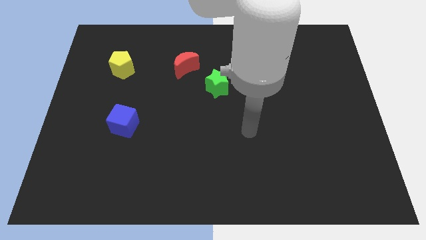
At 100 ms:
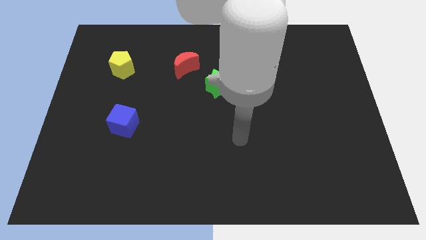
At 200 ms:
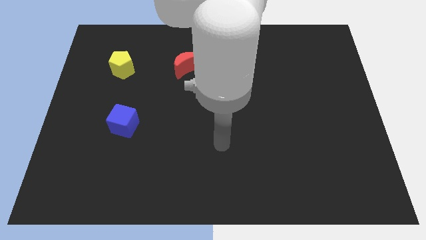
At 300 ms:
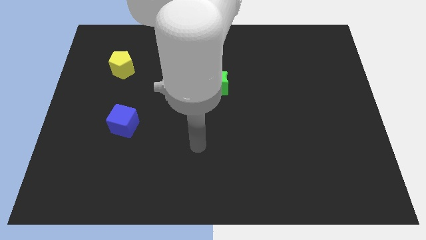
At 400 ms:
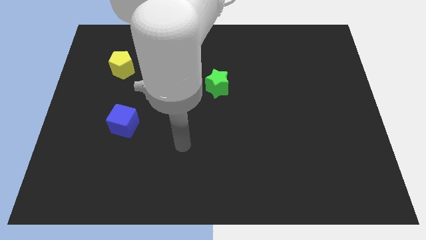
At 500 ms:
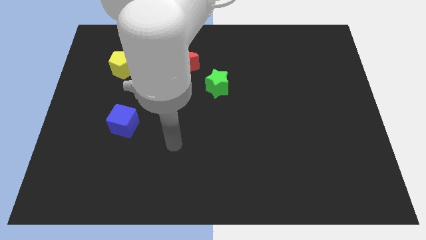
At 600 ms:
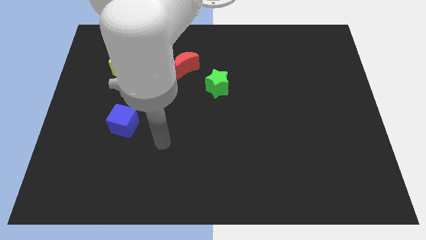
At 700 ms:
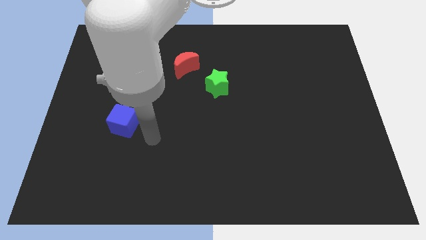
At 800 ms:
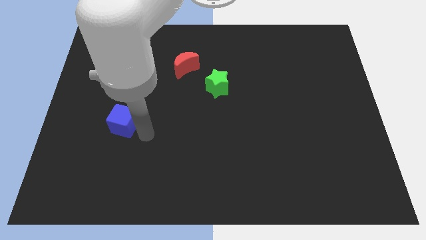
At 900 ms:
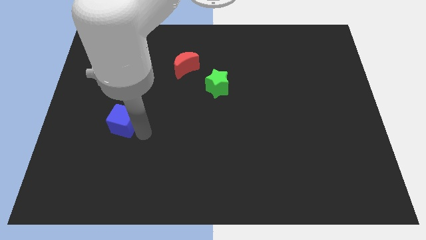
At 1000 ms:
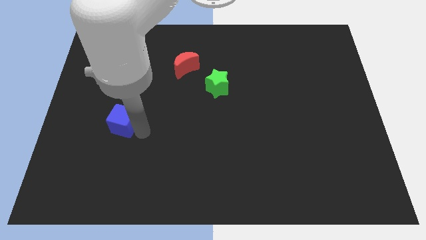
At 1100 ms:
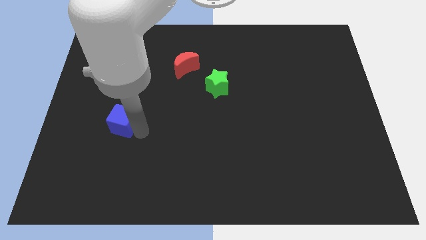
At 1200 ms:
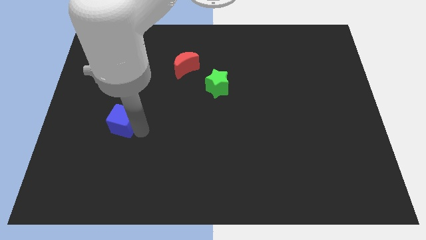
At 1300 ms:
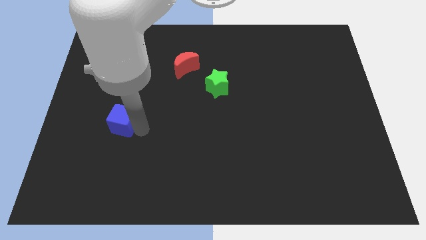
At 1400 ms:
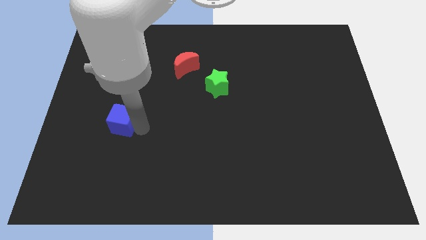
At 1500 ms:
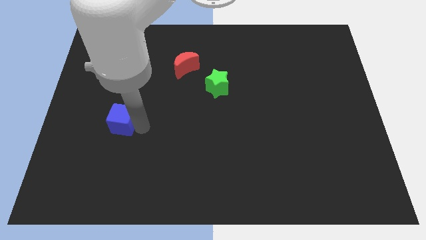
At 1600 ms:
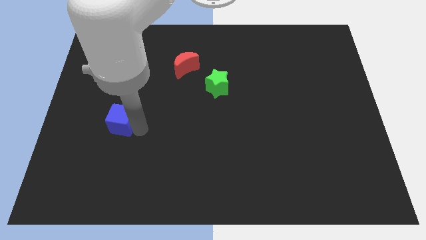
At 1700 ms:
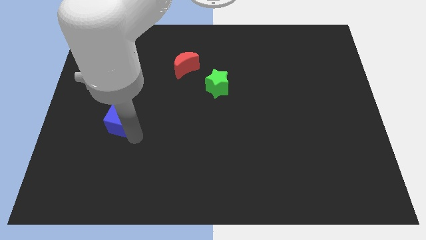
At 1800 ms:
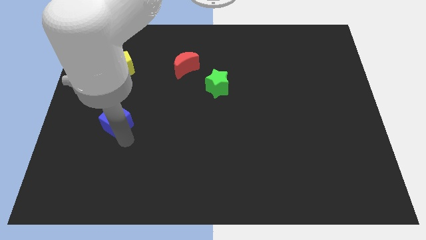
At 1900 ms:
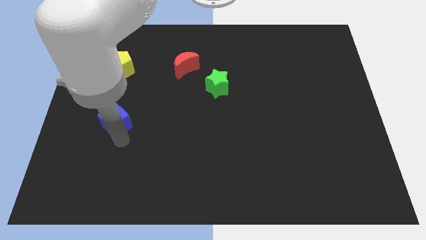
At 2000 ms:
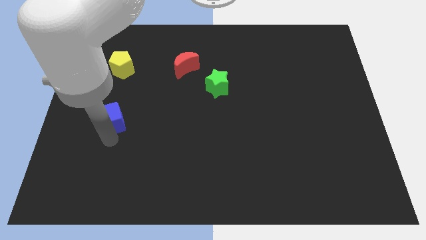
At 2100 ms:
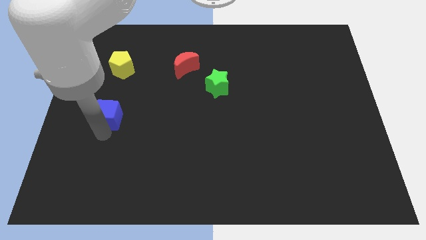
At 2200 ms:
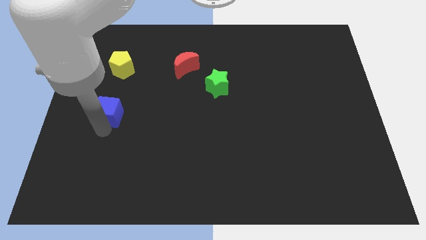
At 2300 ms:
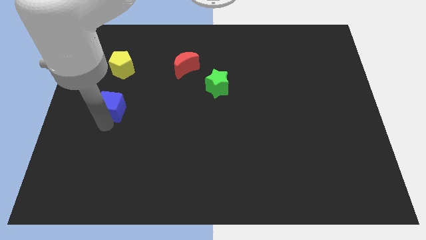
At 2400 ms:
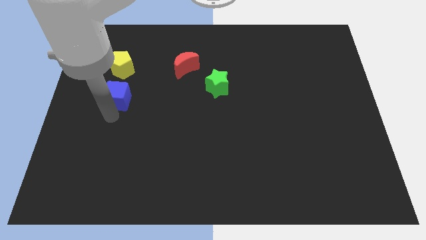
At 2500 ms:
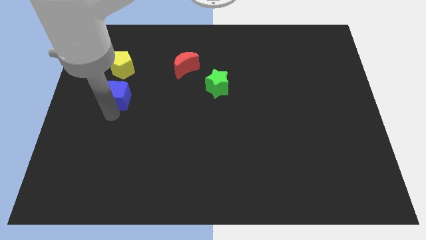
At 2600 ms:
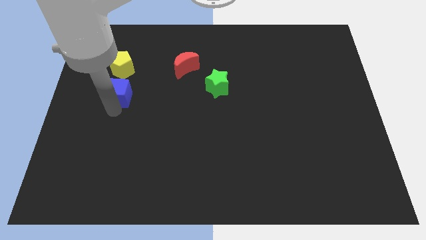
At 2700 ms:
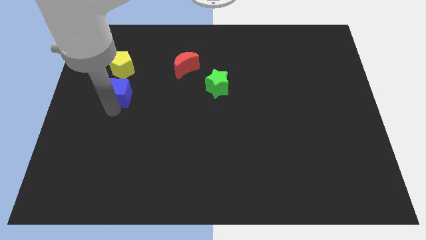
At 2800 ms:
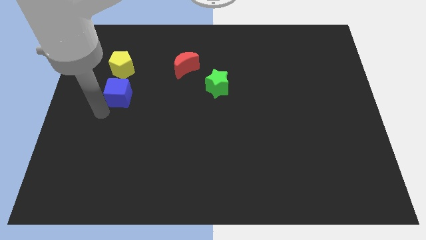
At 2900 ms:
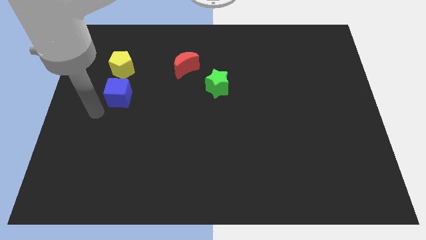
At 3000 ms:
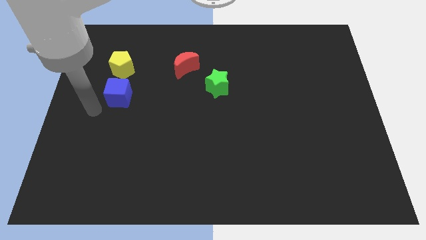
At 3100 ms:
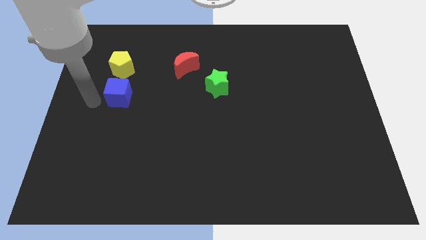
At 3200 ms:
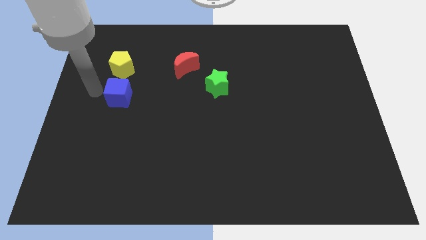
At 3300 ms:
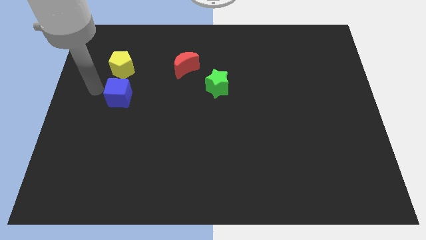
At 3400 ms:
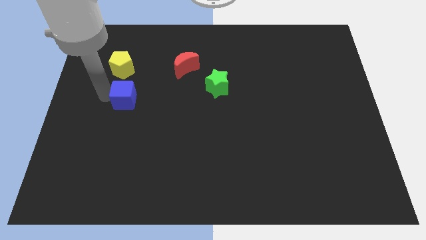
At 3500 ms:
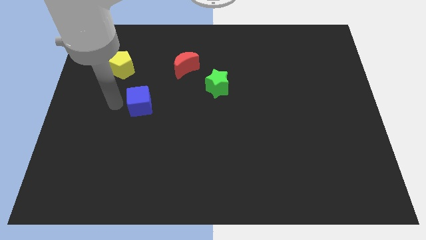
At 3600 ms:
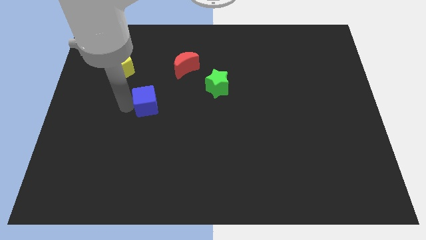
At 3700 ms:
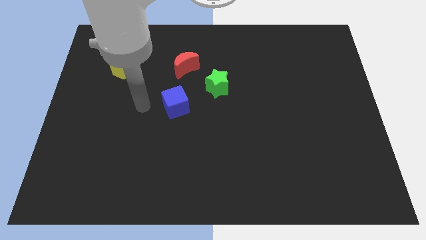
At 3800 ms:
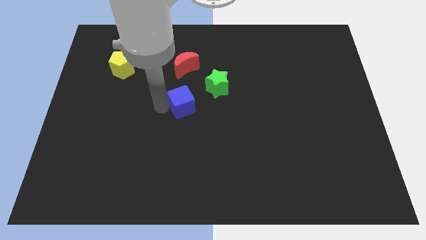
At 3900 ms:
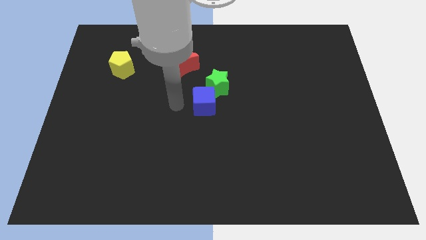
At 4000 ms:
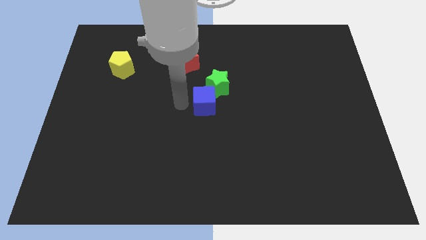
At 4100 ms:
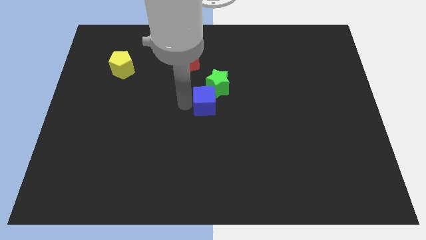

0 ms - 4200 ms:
move the cube to the green star

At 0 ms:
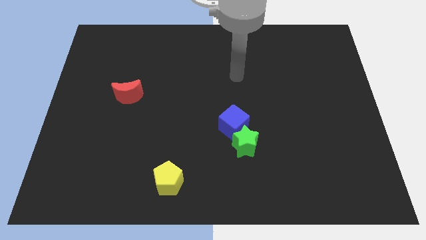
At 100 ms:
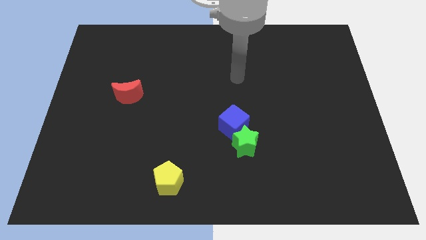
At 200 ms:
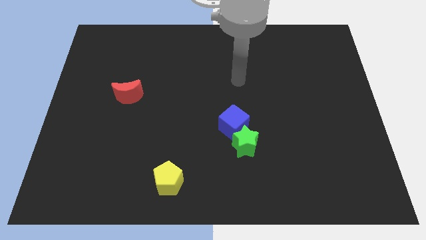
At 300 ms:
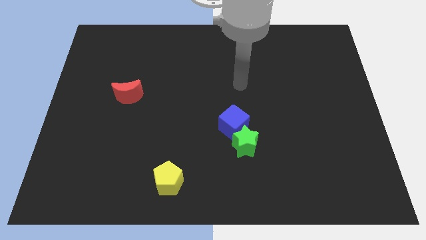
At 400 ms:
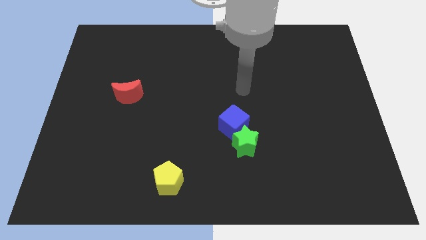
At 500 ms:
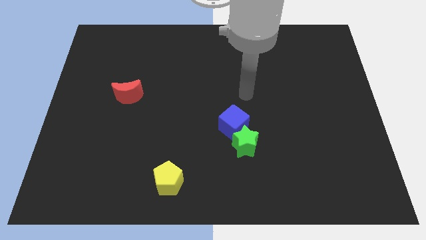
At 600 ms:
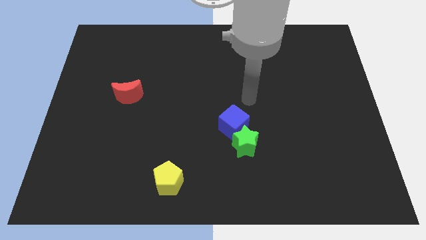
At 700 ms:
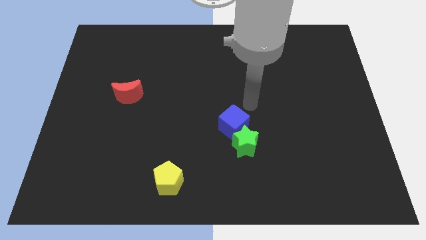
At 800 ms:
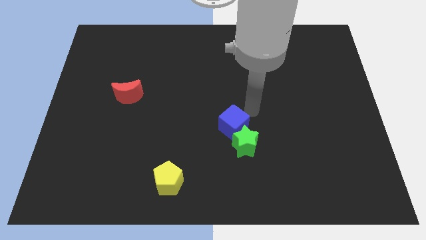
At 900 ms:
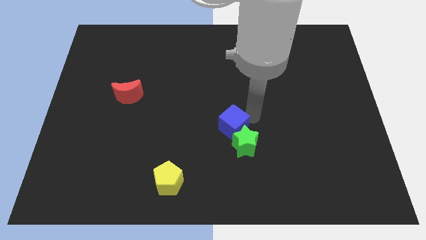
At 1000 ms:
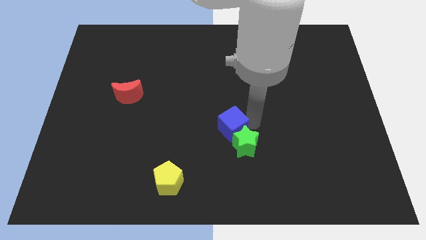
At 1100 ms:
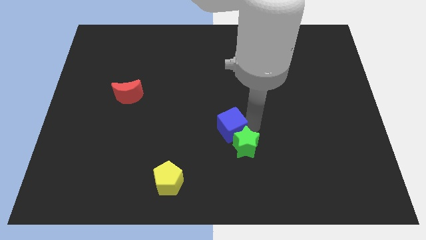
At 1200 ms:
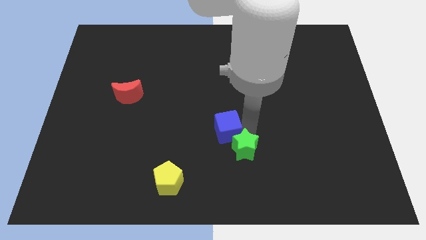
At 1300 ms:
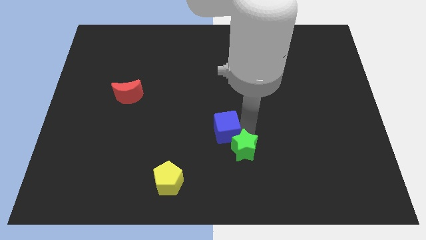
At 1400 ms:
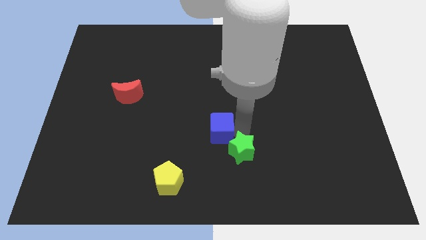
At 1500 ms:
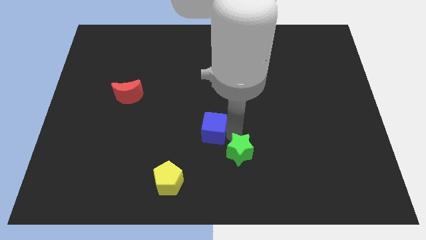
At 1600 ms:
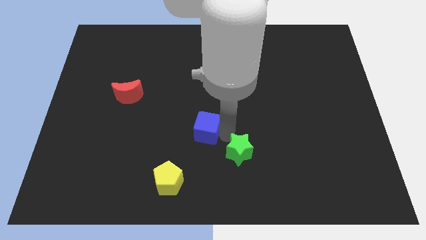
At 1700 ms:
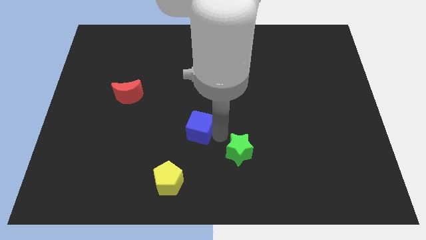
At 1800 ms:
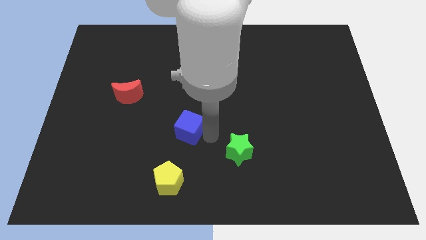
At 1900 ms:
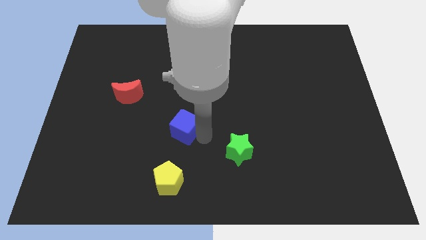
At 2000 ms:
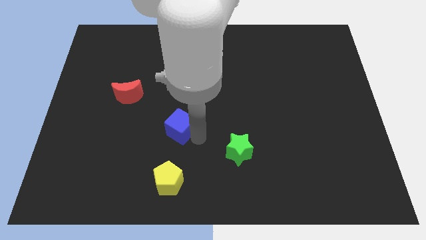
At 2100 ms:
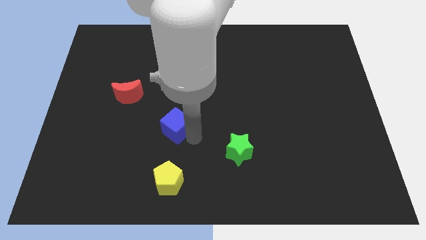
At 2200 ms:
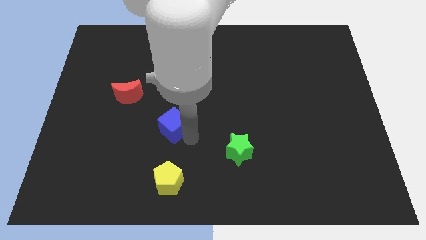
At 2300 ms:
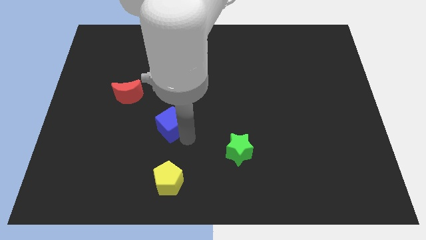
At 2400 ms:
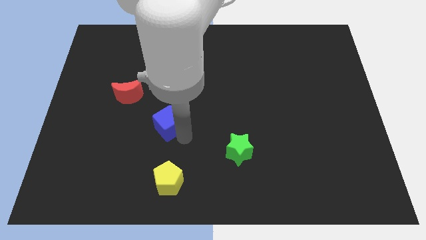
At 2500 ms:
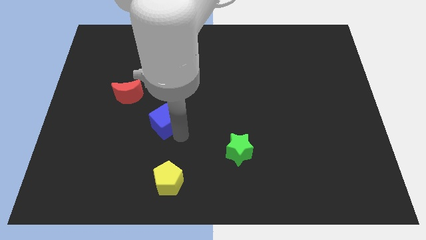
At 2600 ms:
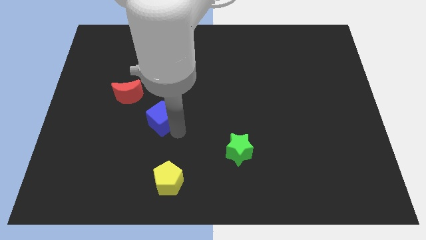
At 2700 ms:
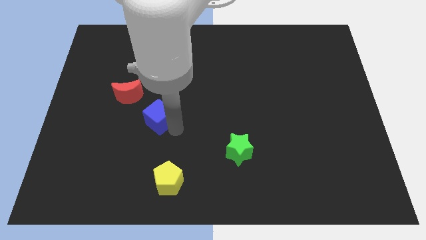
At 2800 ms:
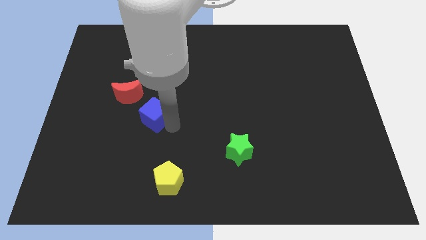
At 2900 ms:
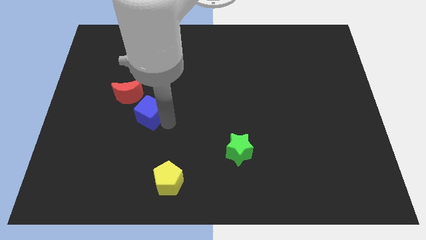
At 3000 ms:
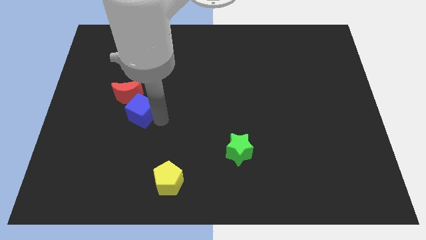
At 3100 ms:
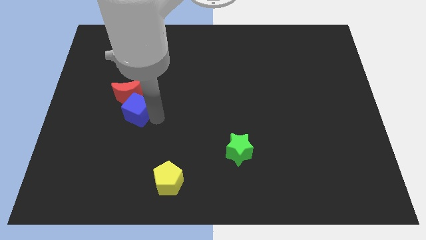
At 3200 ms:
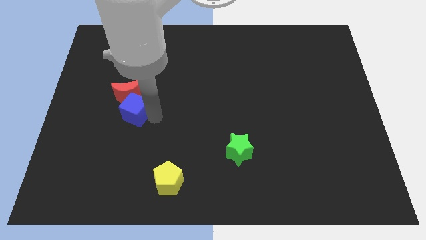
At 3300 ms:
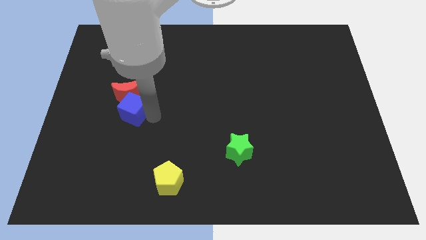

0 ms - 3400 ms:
put the blue block towards the red block

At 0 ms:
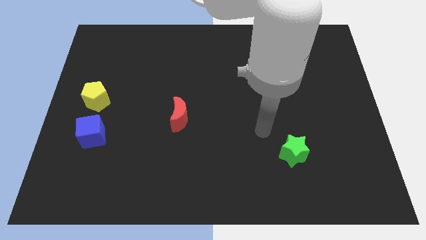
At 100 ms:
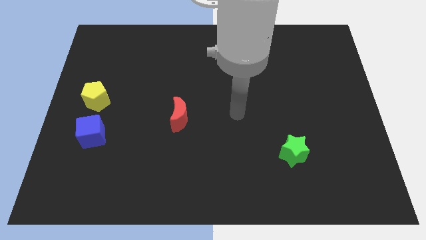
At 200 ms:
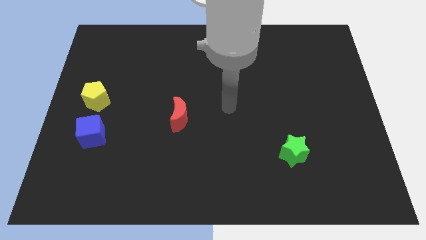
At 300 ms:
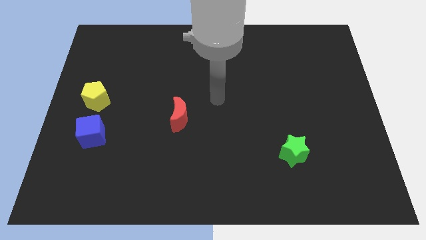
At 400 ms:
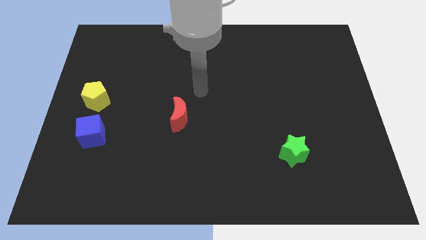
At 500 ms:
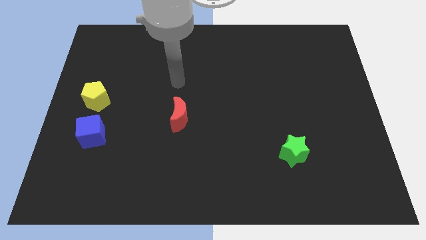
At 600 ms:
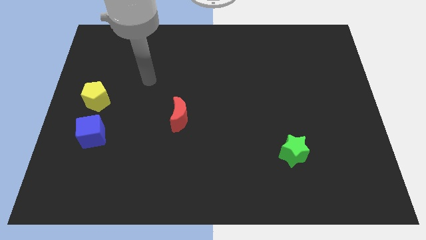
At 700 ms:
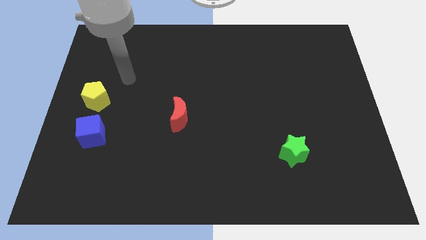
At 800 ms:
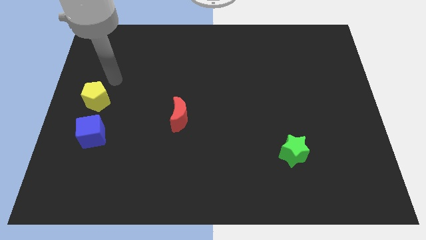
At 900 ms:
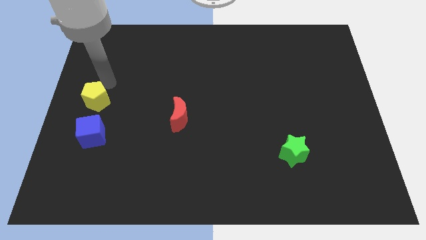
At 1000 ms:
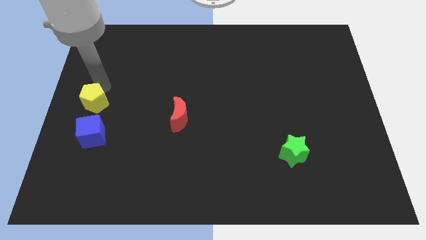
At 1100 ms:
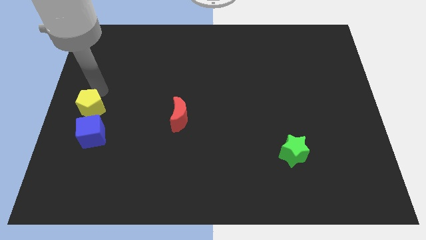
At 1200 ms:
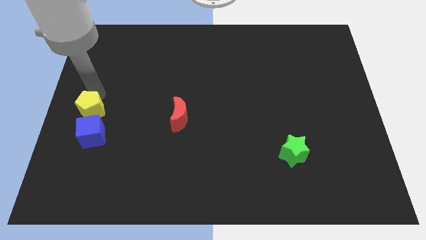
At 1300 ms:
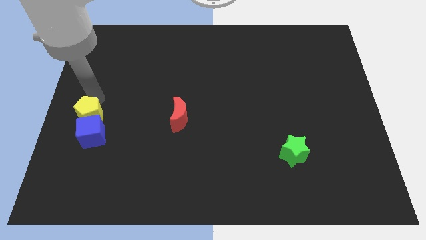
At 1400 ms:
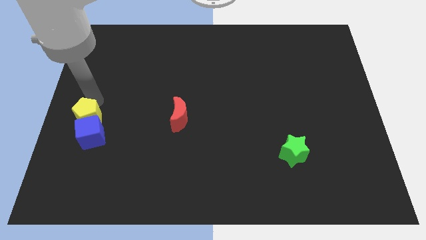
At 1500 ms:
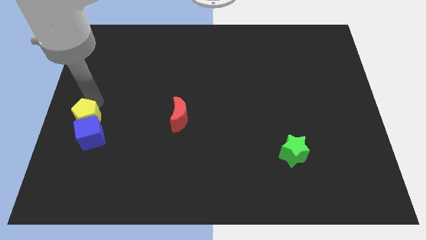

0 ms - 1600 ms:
move the pentagon next to the blue block
